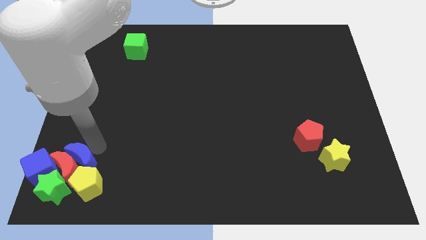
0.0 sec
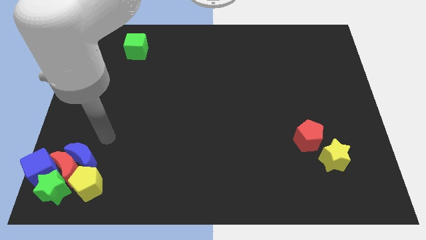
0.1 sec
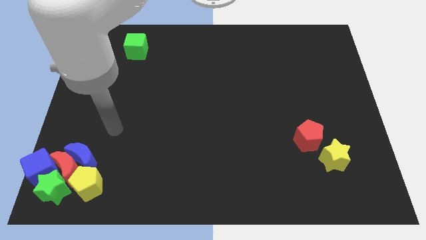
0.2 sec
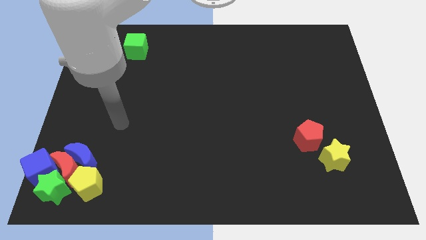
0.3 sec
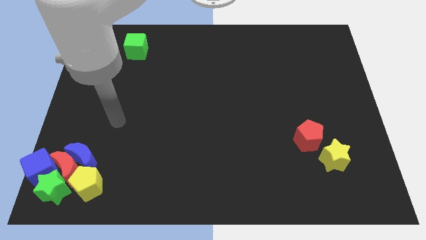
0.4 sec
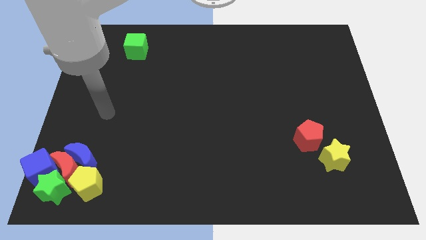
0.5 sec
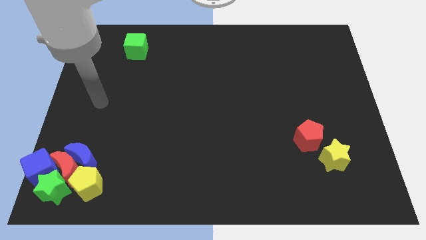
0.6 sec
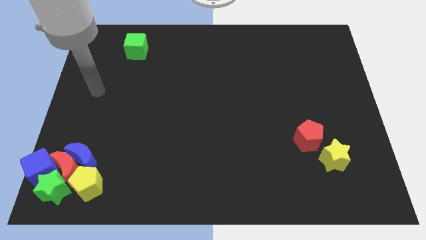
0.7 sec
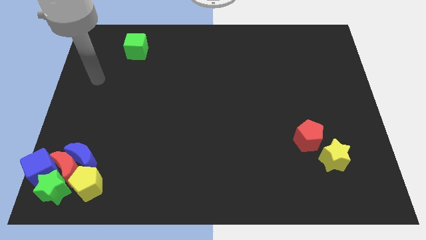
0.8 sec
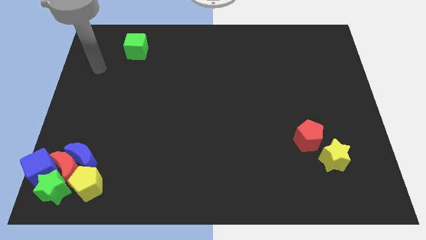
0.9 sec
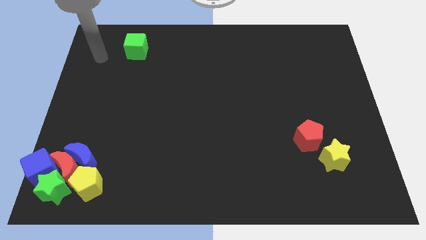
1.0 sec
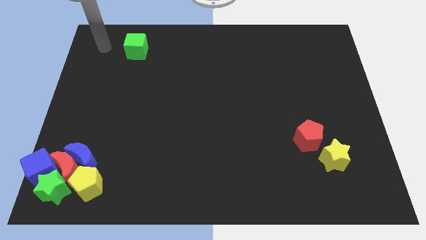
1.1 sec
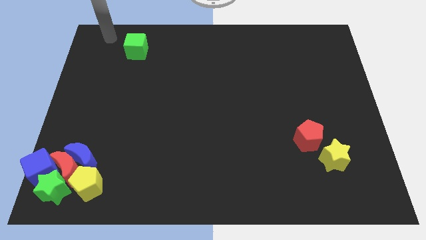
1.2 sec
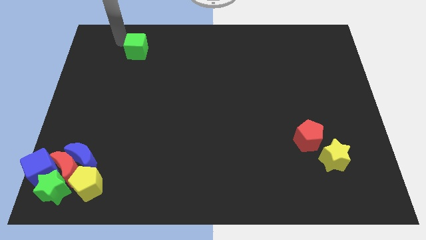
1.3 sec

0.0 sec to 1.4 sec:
move your arm away from the blue moon

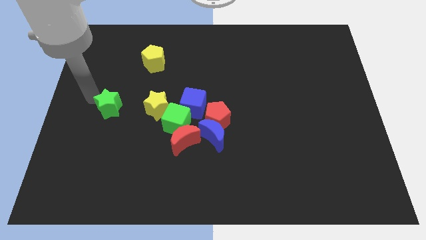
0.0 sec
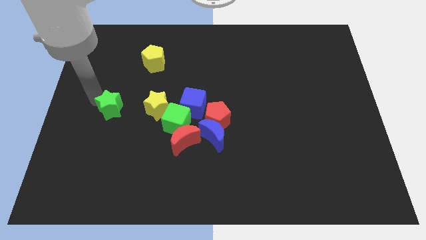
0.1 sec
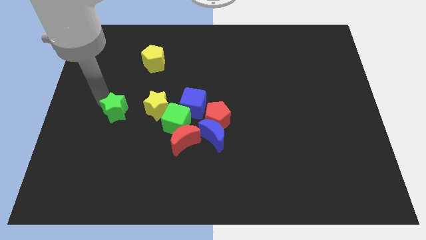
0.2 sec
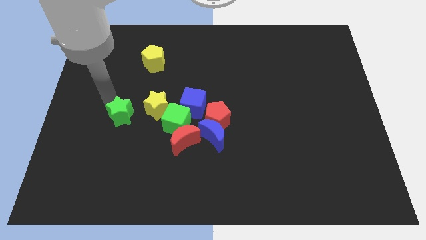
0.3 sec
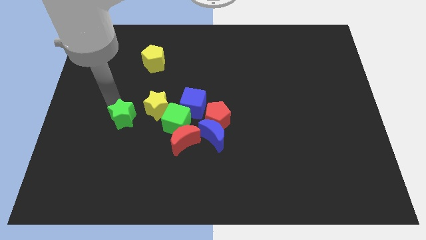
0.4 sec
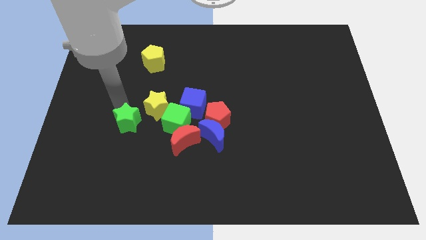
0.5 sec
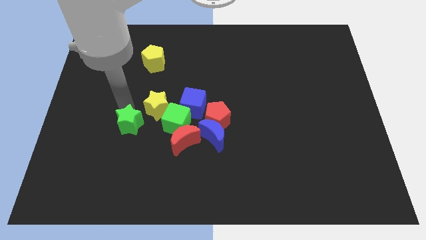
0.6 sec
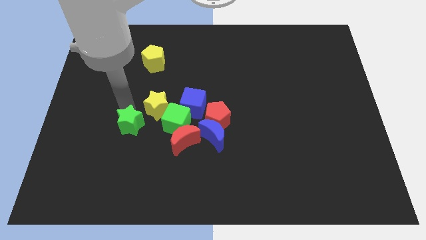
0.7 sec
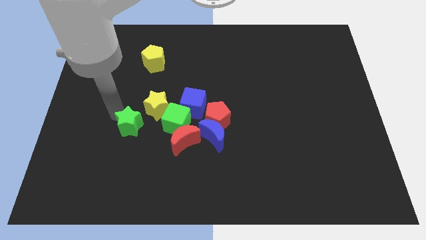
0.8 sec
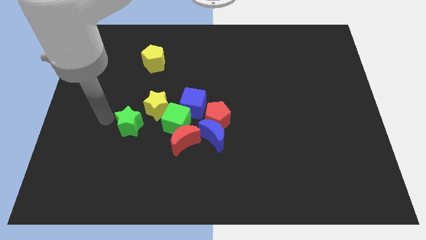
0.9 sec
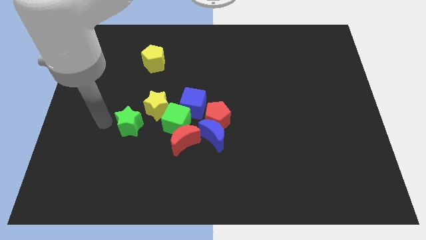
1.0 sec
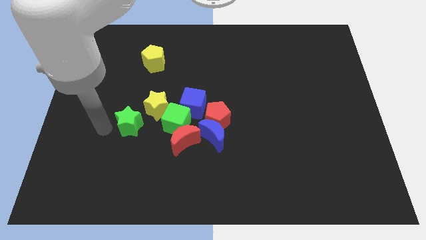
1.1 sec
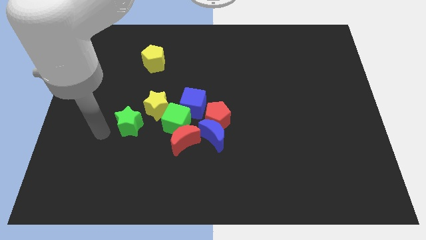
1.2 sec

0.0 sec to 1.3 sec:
place the green star to the left of the green cube

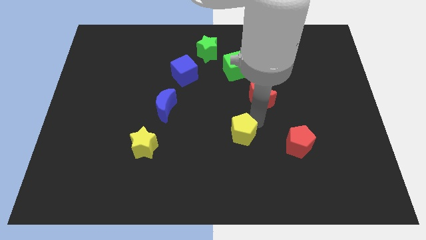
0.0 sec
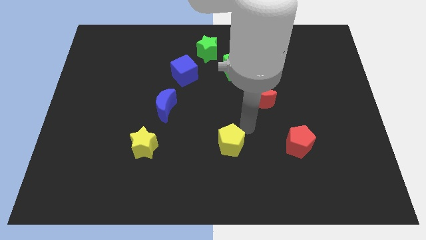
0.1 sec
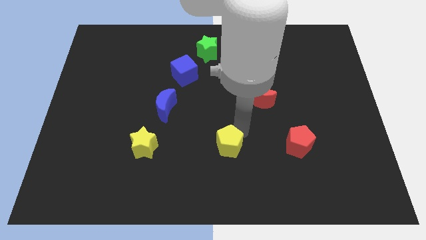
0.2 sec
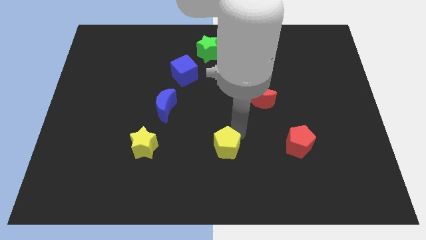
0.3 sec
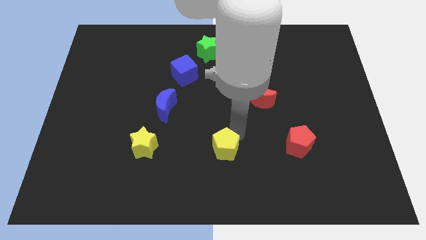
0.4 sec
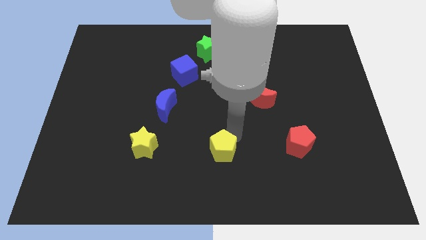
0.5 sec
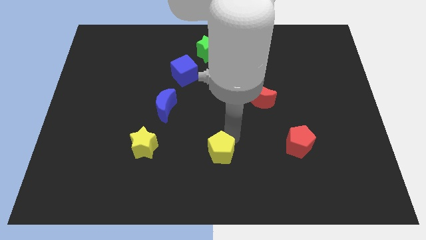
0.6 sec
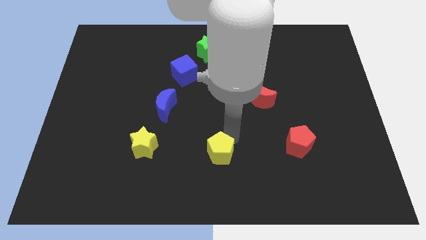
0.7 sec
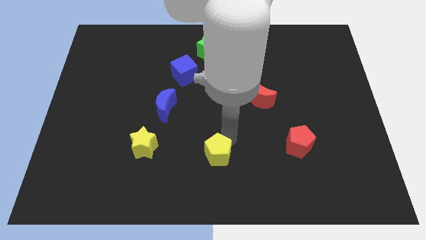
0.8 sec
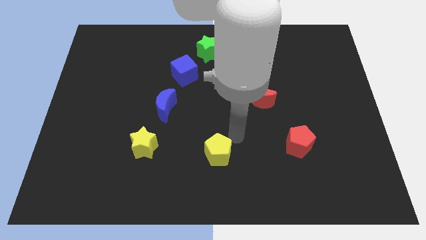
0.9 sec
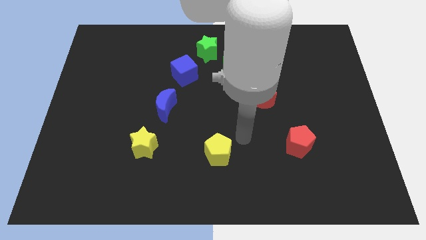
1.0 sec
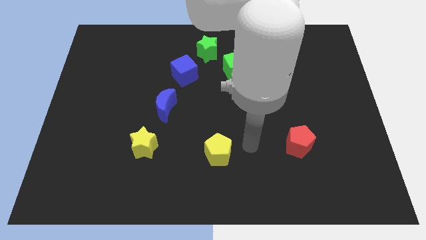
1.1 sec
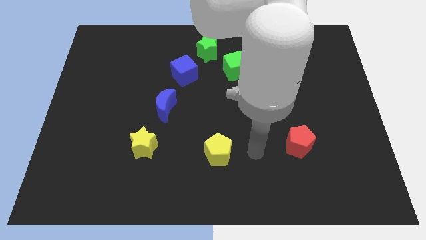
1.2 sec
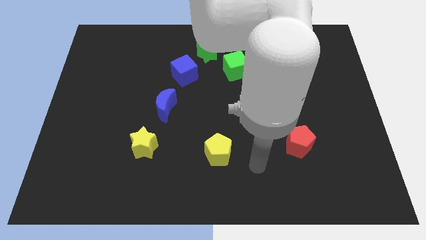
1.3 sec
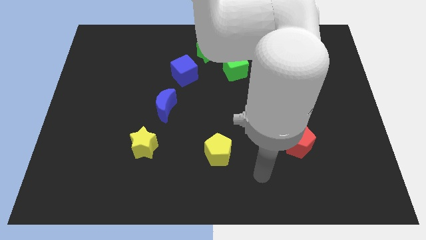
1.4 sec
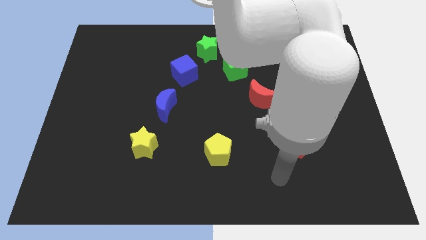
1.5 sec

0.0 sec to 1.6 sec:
drag the yellow pentagon between the yellow star and red pentagon

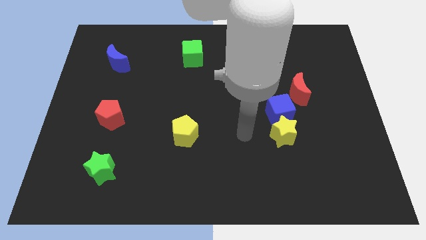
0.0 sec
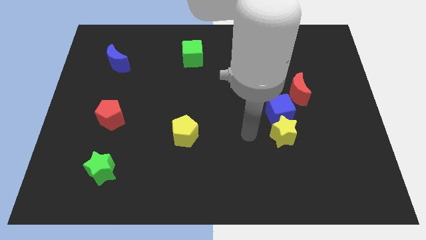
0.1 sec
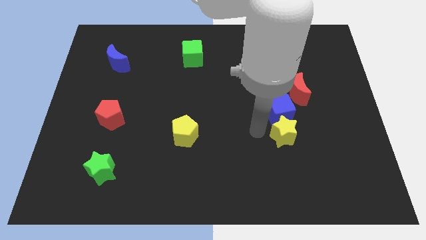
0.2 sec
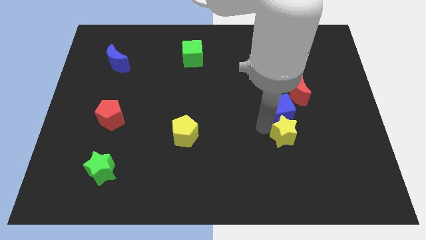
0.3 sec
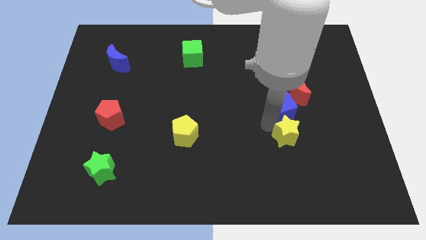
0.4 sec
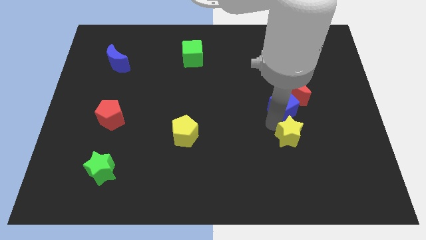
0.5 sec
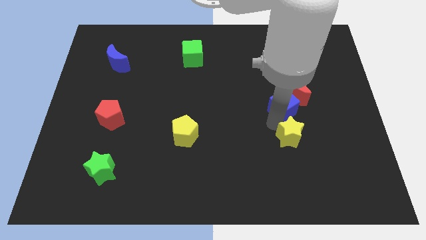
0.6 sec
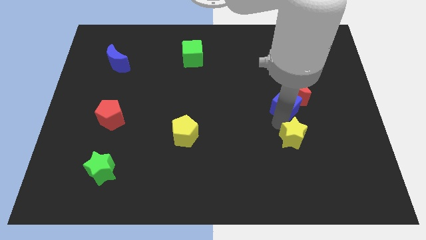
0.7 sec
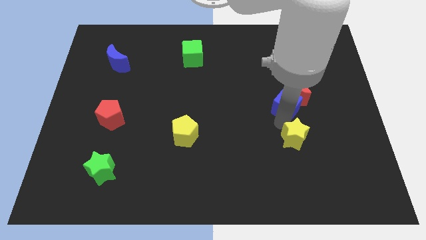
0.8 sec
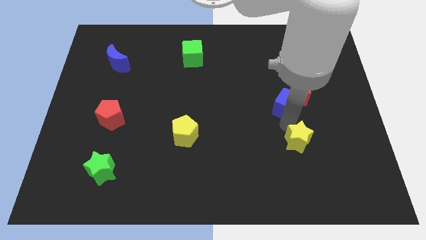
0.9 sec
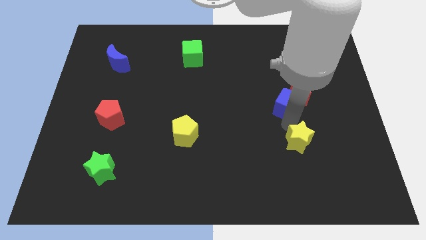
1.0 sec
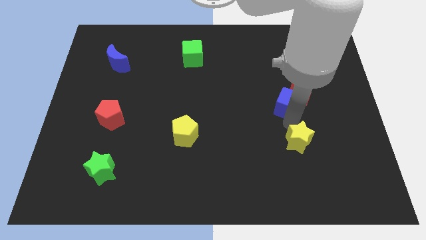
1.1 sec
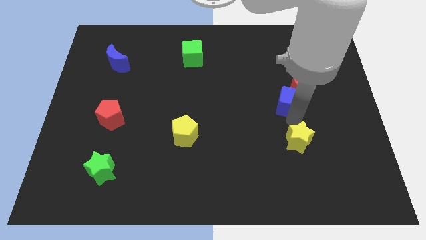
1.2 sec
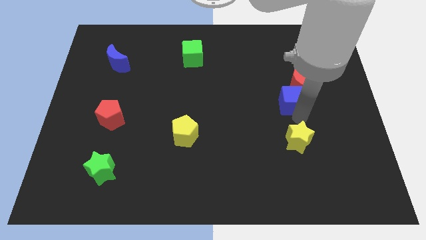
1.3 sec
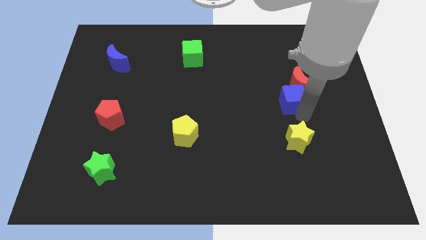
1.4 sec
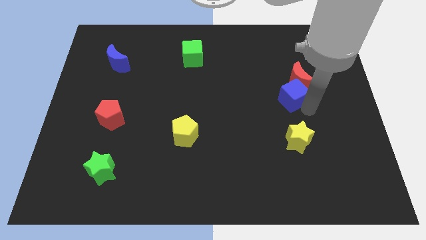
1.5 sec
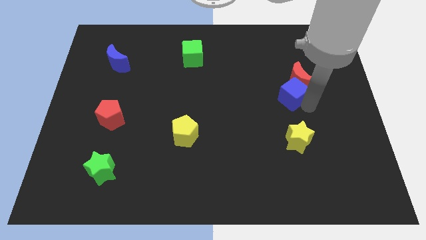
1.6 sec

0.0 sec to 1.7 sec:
separate yellow star and the blue cube

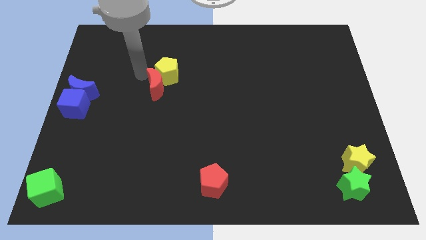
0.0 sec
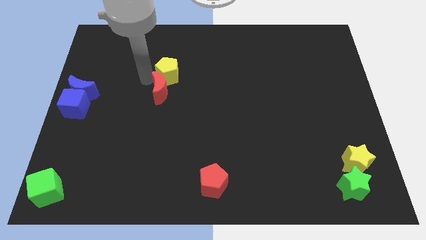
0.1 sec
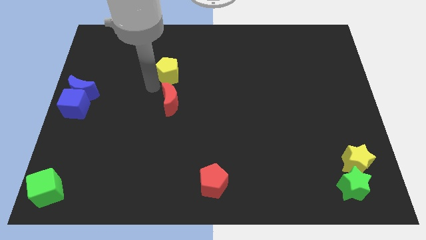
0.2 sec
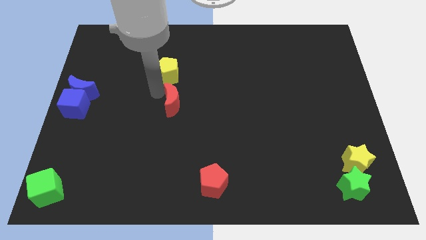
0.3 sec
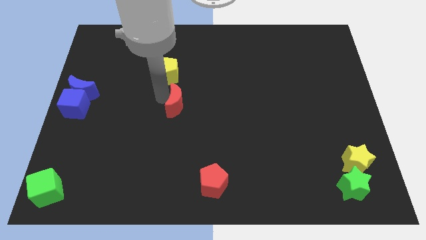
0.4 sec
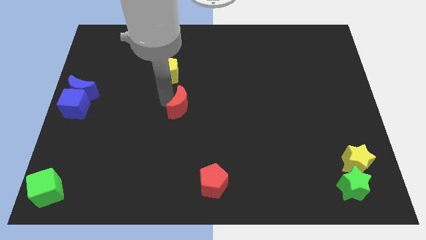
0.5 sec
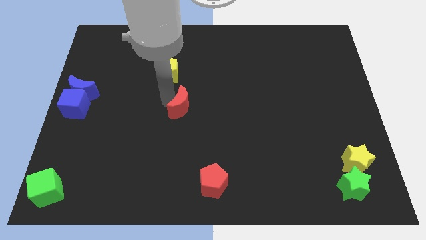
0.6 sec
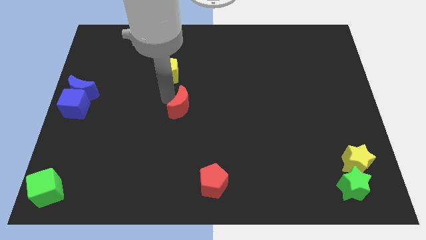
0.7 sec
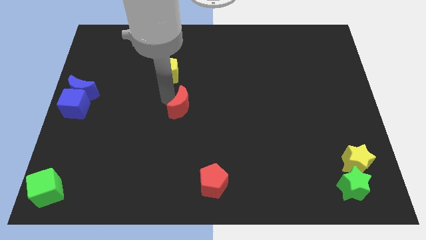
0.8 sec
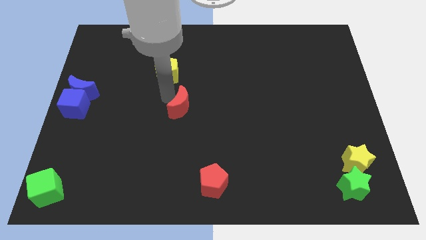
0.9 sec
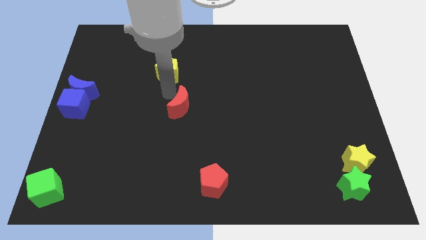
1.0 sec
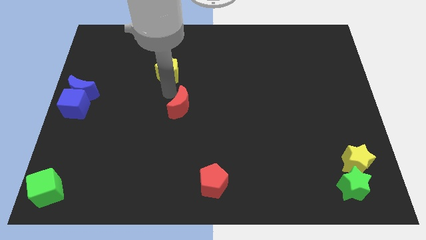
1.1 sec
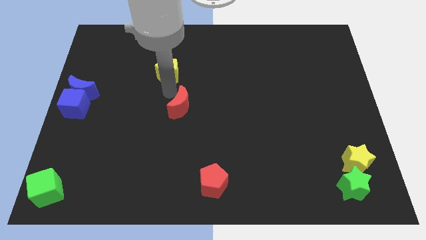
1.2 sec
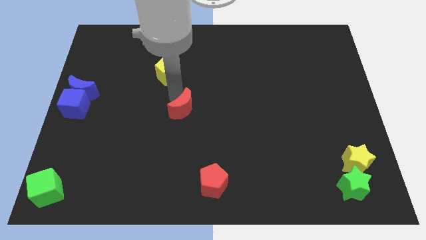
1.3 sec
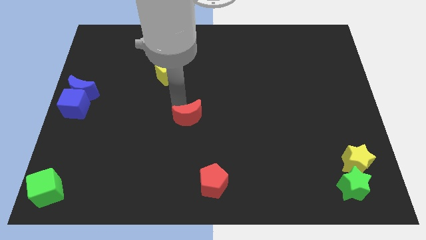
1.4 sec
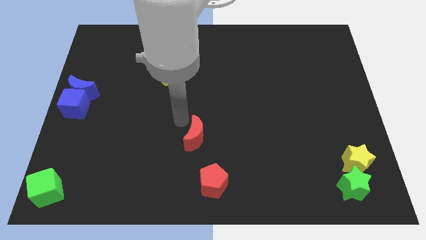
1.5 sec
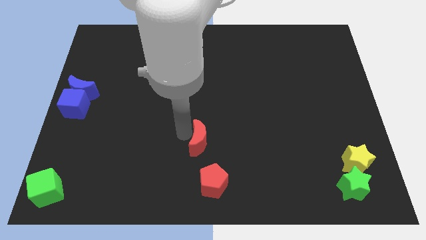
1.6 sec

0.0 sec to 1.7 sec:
separate the red crescent from the yellow pentagon

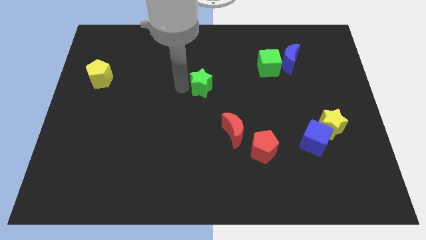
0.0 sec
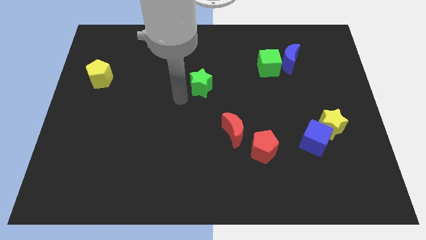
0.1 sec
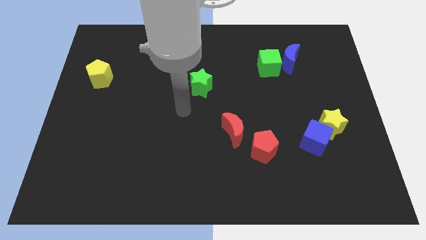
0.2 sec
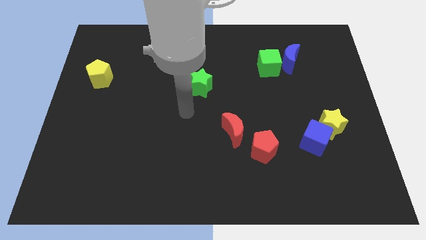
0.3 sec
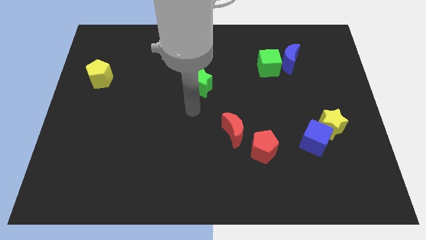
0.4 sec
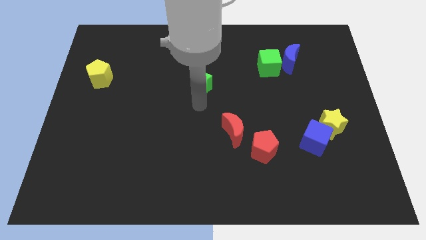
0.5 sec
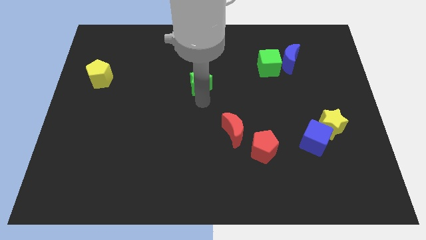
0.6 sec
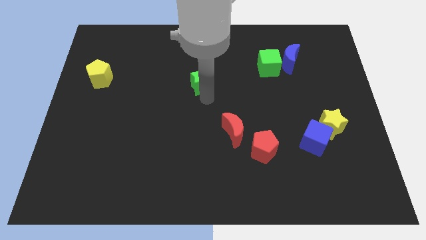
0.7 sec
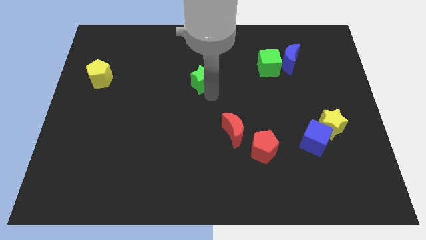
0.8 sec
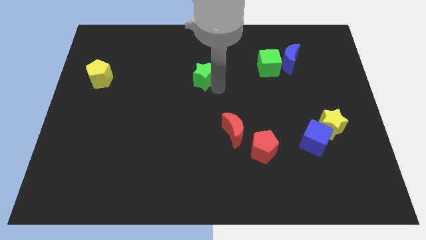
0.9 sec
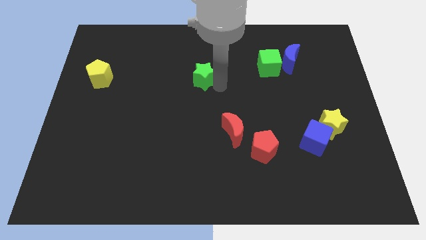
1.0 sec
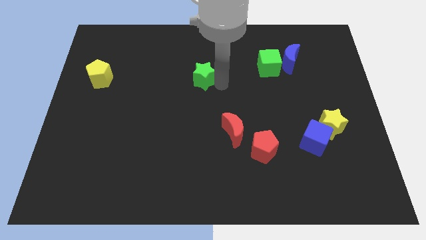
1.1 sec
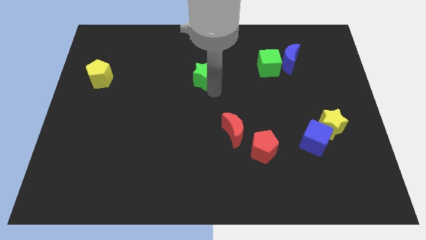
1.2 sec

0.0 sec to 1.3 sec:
move green star slightly right

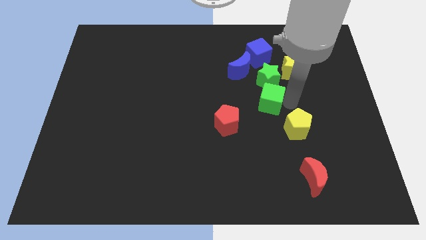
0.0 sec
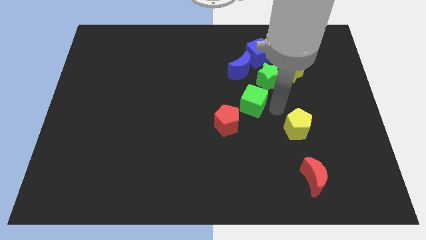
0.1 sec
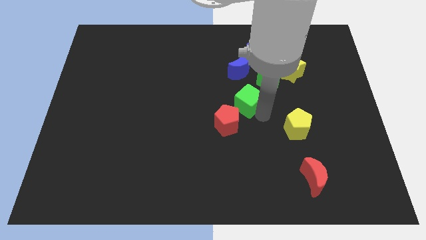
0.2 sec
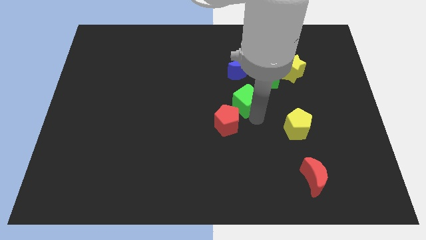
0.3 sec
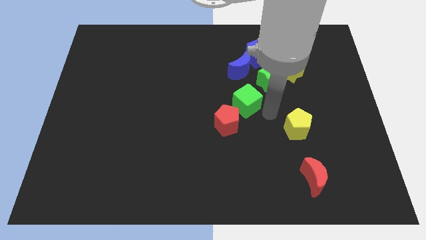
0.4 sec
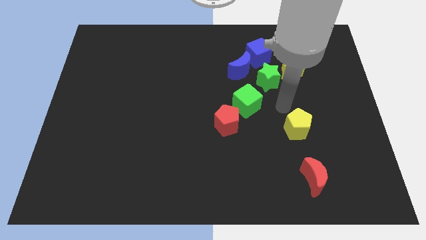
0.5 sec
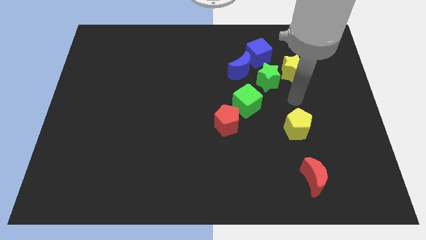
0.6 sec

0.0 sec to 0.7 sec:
push the green cube between green star and red pentagon diagonally
